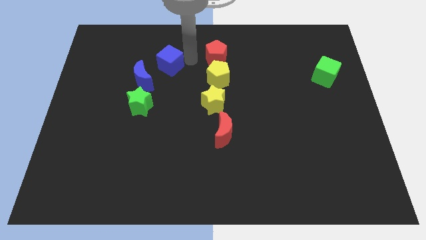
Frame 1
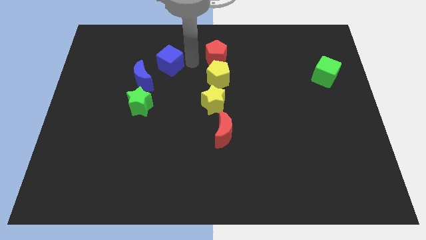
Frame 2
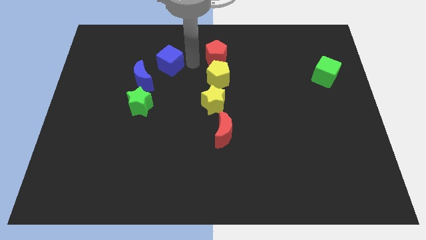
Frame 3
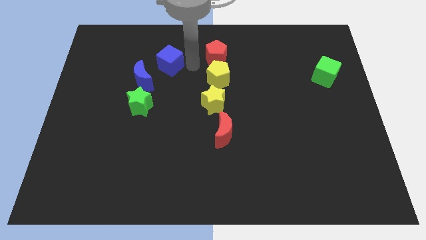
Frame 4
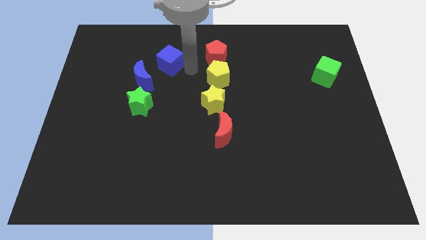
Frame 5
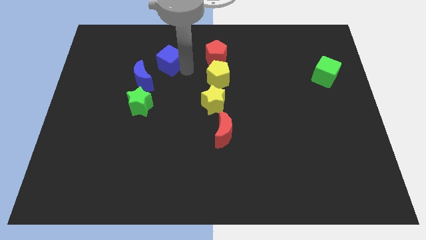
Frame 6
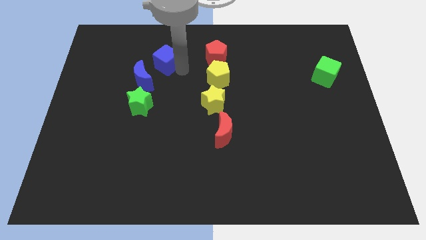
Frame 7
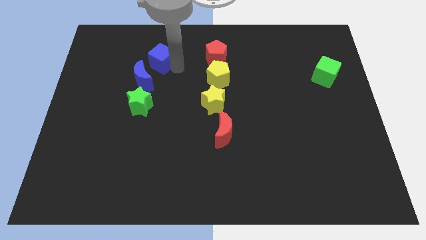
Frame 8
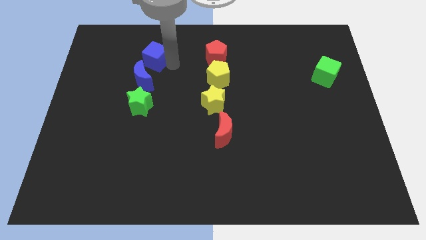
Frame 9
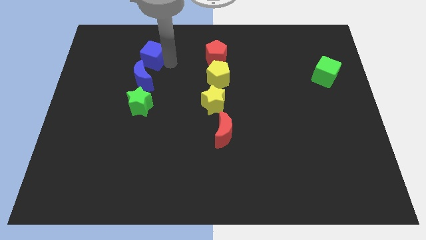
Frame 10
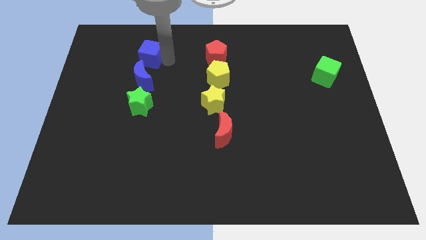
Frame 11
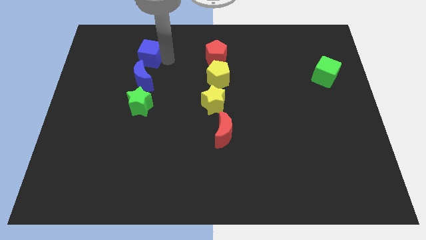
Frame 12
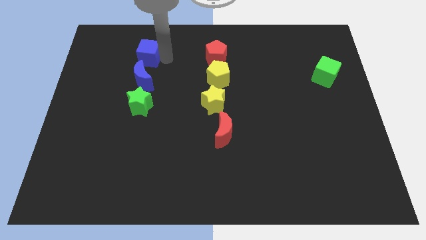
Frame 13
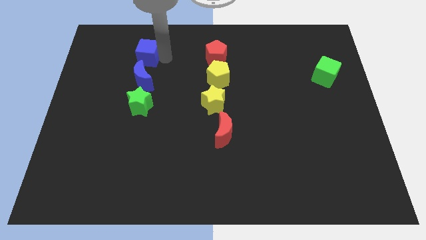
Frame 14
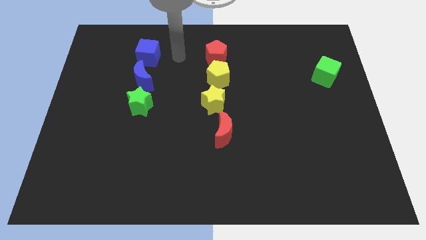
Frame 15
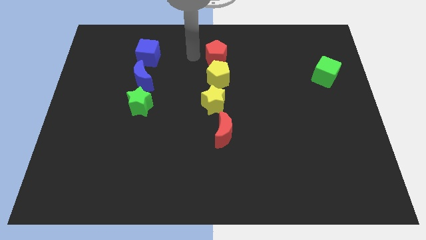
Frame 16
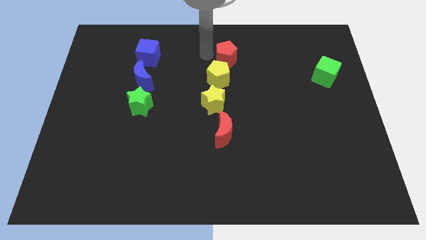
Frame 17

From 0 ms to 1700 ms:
push blue cube above the blue moon

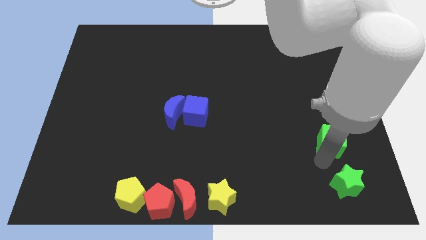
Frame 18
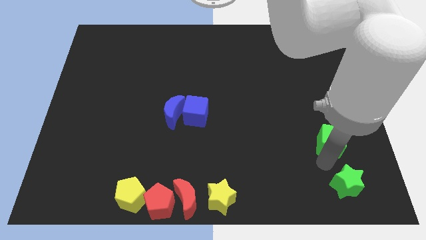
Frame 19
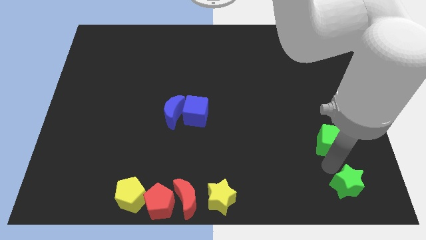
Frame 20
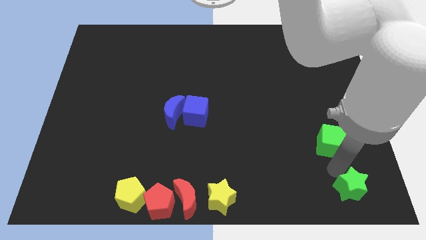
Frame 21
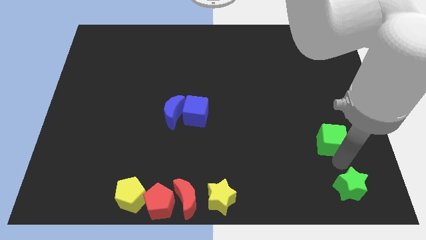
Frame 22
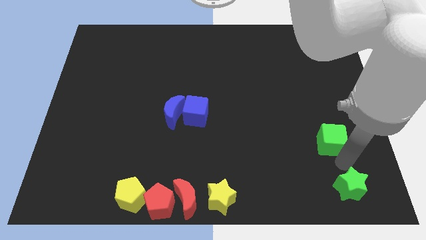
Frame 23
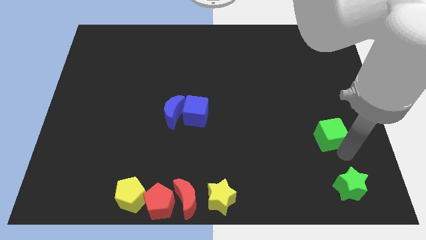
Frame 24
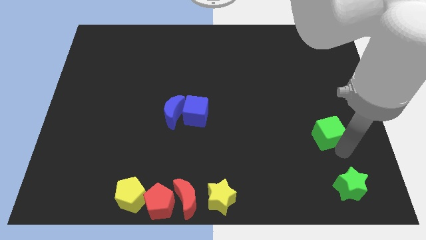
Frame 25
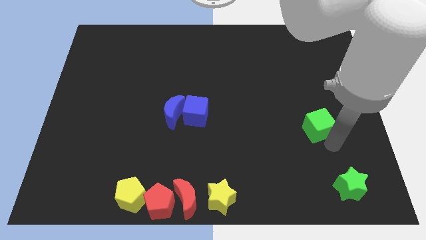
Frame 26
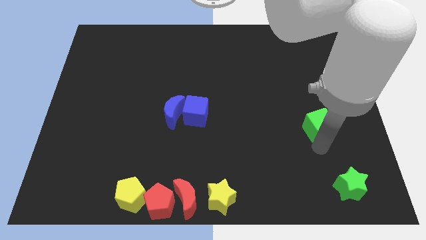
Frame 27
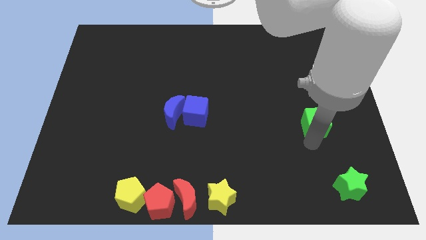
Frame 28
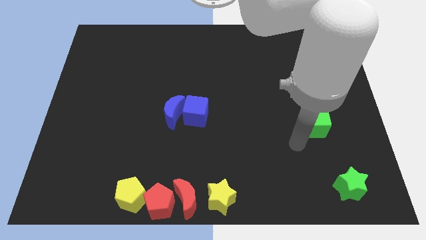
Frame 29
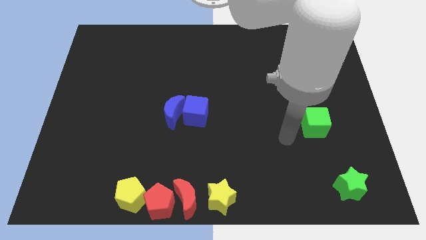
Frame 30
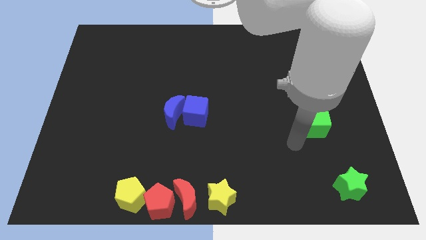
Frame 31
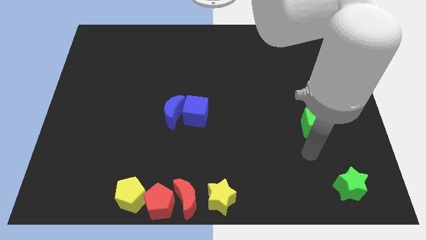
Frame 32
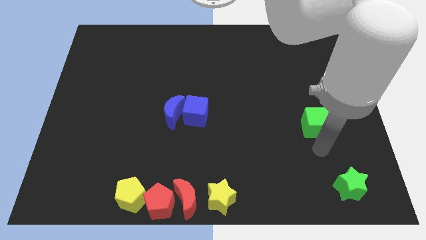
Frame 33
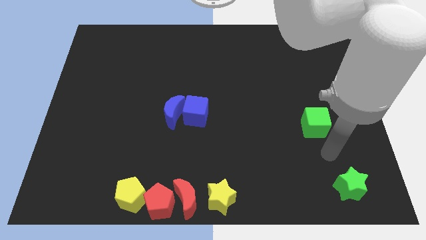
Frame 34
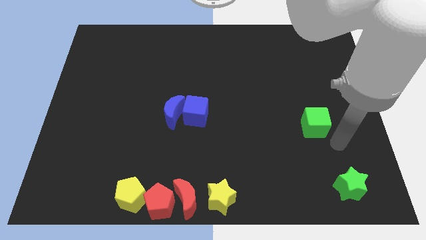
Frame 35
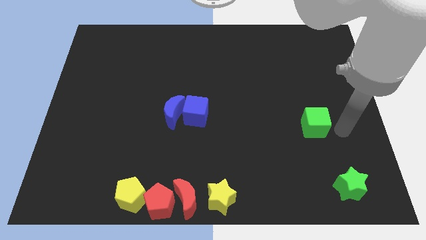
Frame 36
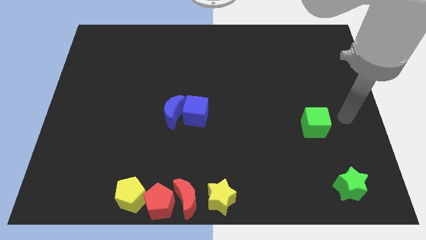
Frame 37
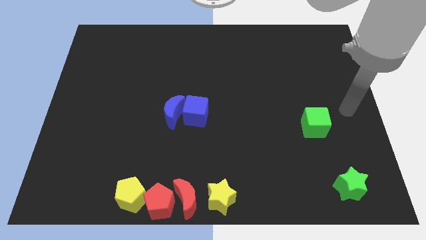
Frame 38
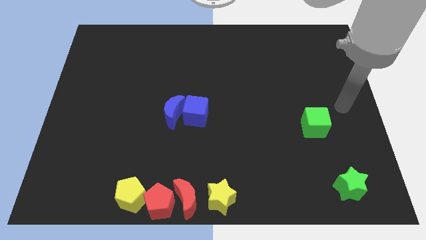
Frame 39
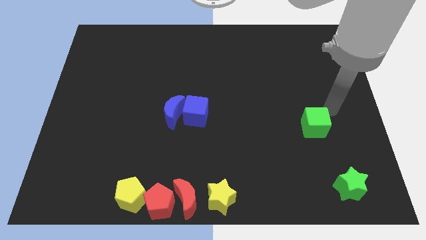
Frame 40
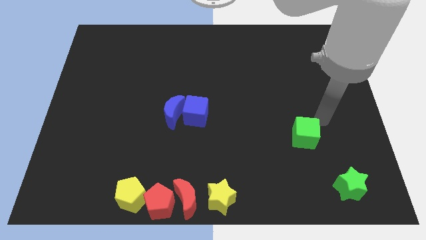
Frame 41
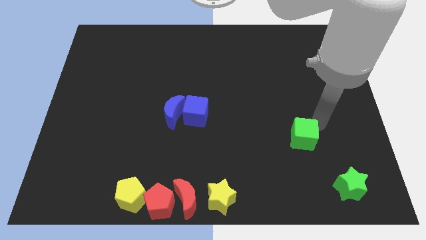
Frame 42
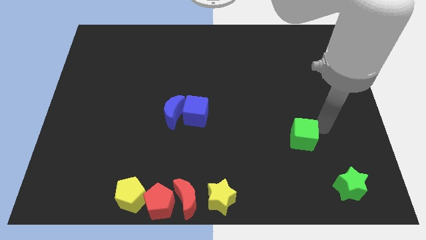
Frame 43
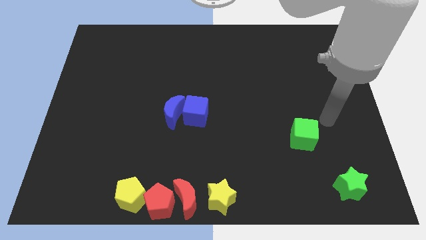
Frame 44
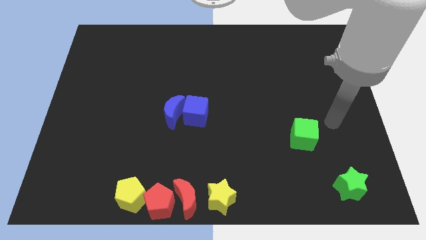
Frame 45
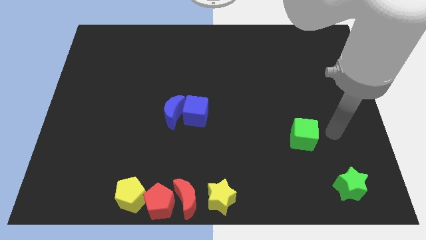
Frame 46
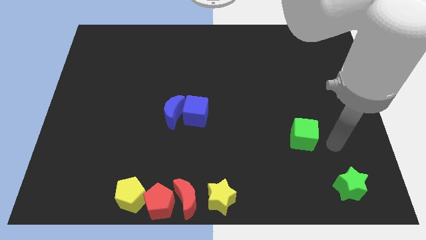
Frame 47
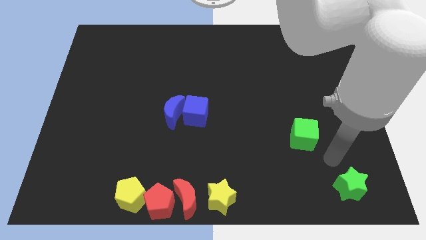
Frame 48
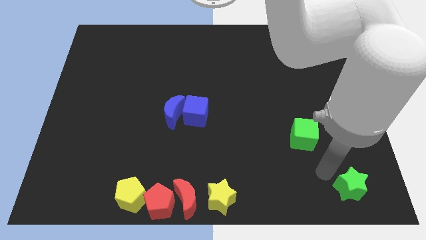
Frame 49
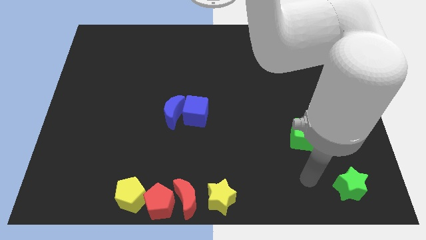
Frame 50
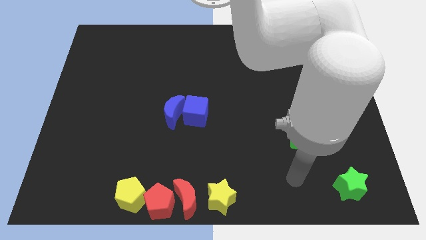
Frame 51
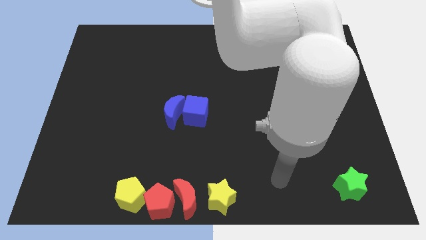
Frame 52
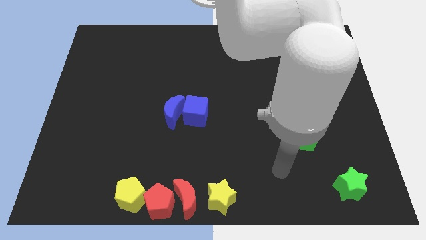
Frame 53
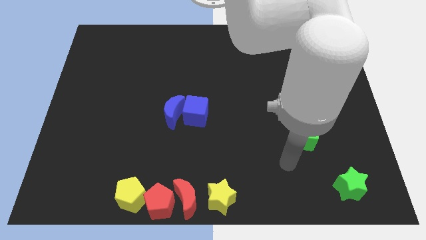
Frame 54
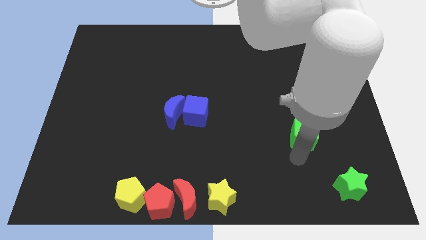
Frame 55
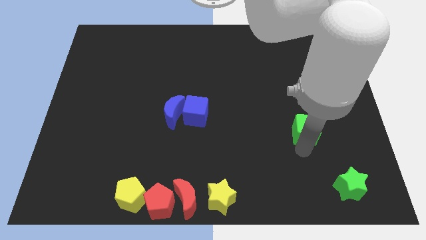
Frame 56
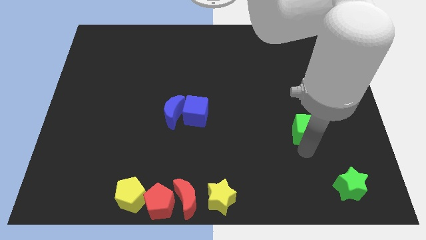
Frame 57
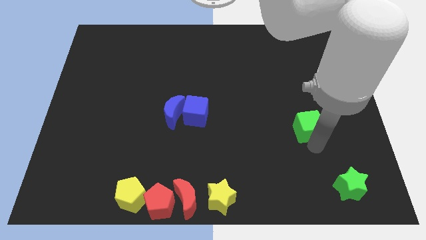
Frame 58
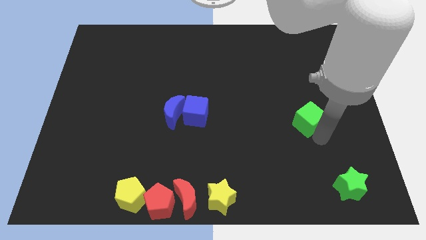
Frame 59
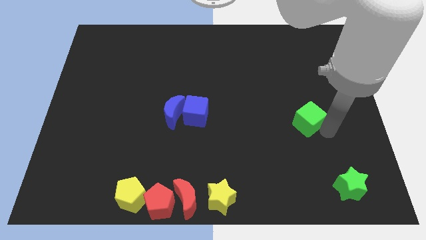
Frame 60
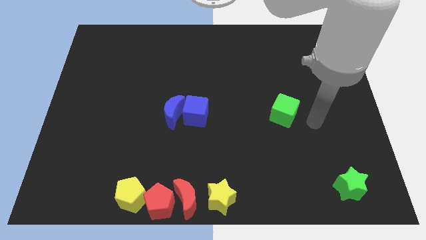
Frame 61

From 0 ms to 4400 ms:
move the green cube horizontally to the right side of the blue cube

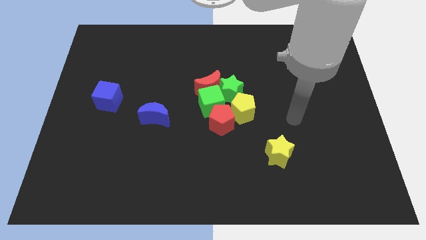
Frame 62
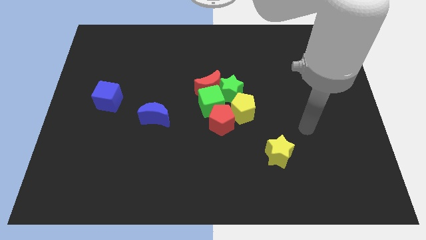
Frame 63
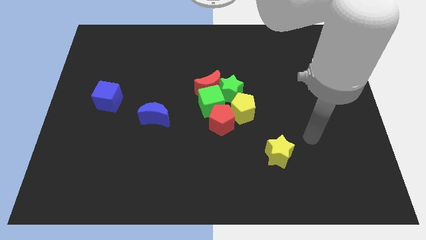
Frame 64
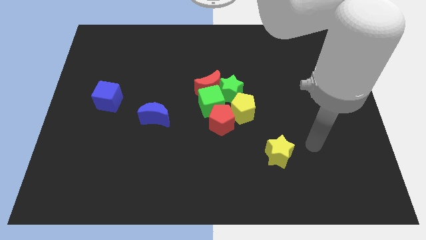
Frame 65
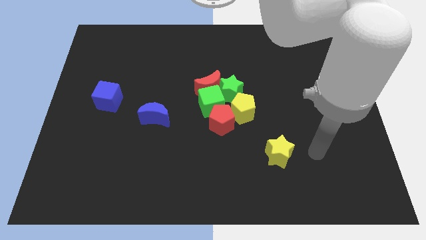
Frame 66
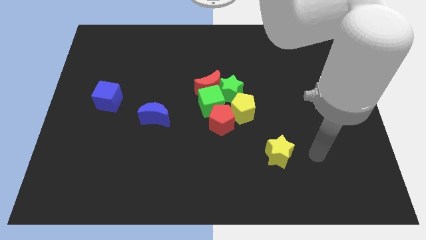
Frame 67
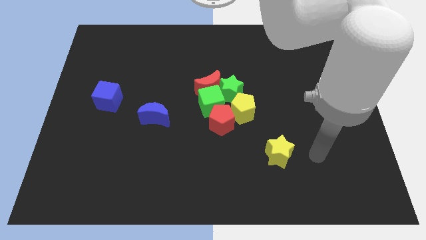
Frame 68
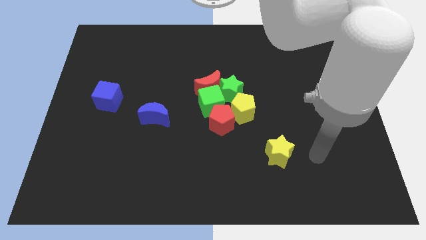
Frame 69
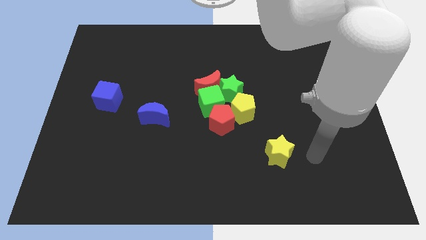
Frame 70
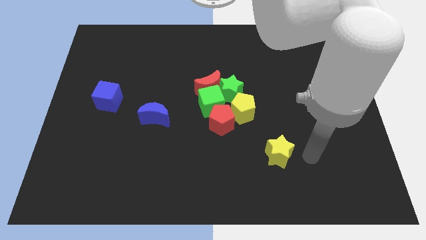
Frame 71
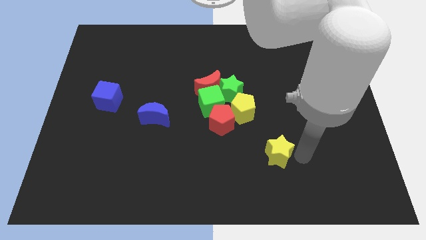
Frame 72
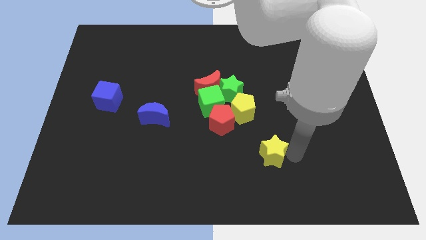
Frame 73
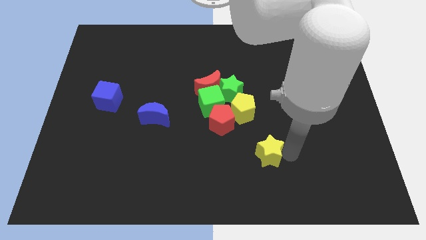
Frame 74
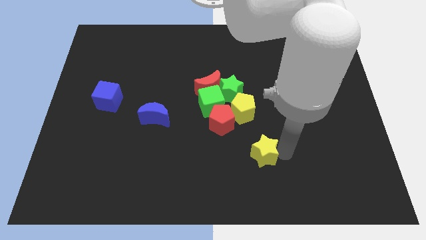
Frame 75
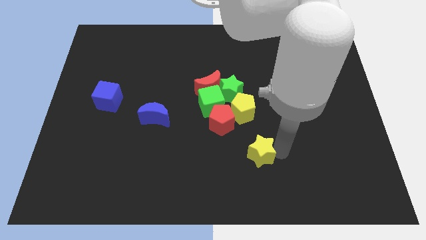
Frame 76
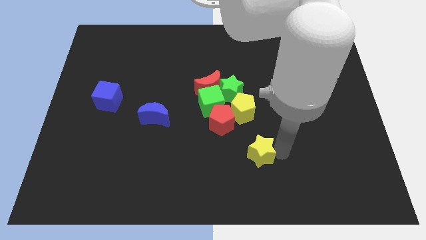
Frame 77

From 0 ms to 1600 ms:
move yellow star towards left

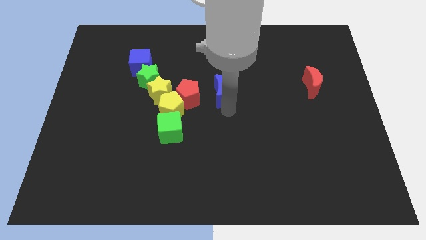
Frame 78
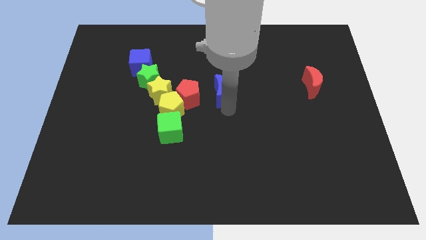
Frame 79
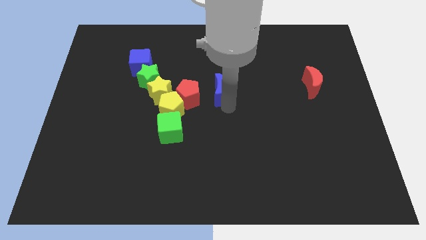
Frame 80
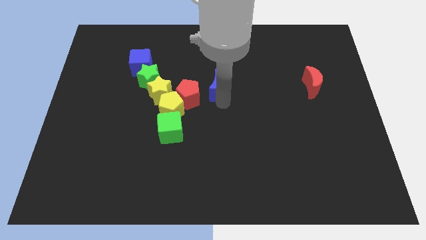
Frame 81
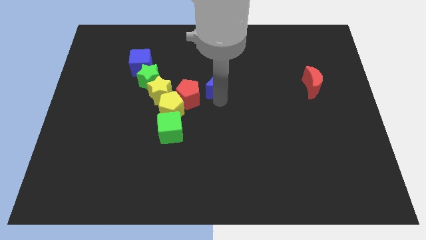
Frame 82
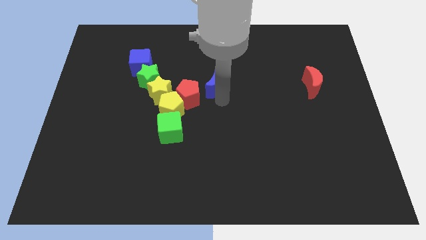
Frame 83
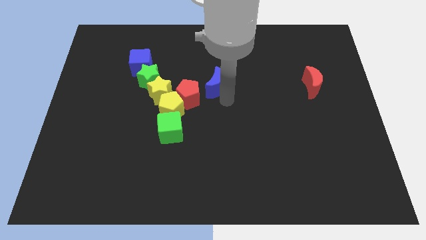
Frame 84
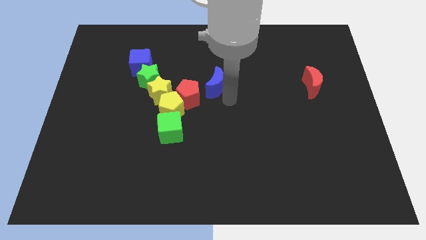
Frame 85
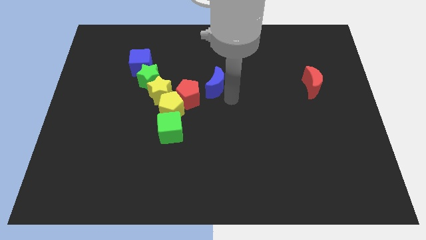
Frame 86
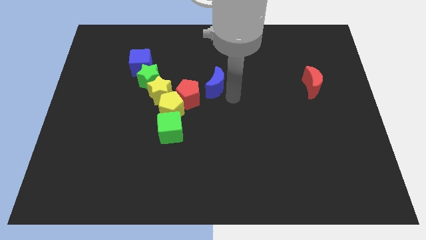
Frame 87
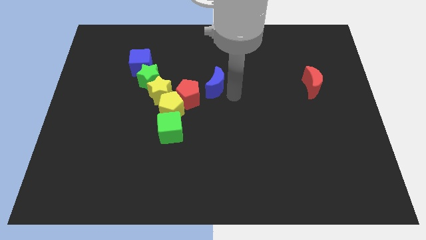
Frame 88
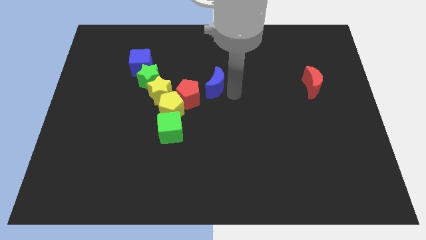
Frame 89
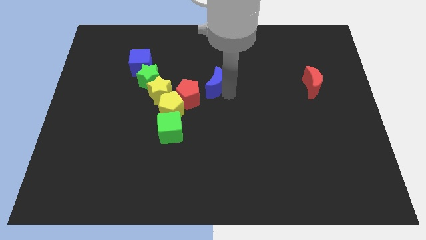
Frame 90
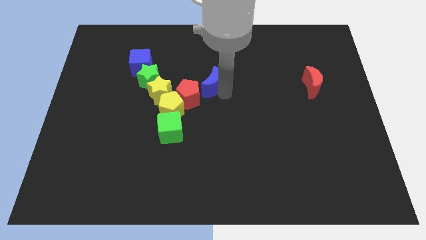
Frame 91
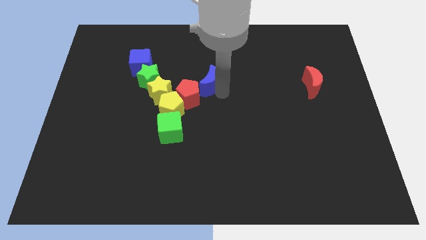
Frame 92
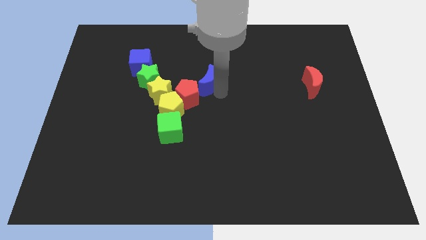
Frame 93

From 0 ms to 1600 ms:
put the blue moon at the top right side of the red pentagon
